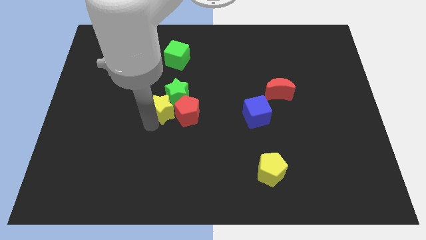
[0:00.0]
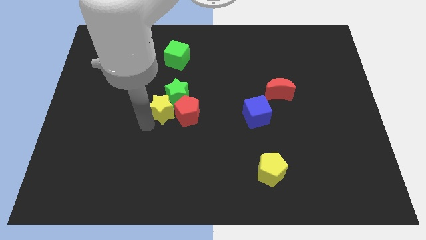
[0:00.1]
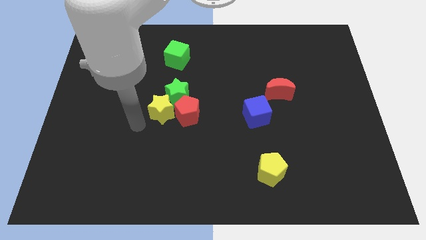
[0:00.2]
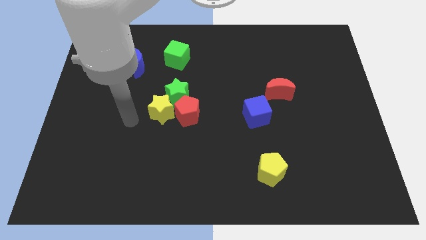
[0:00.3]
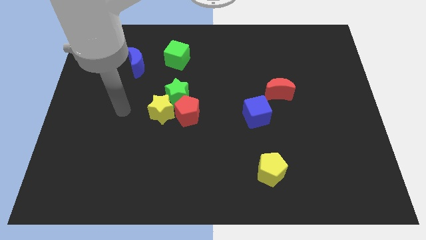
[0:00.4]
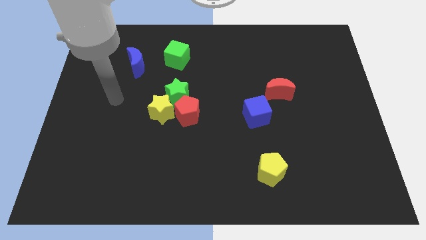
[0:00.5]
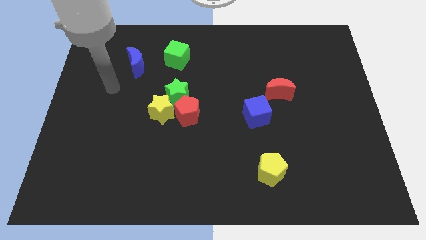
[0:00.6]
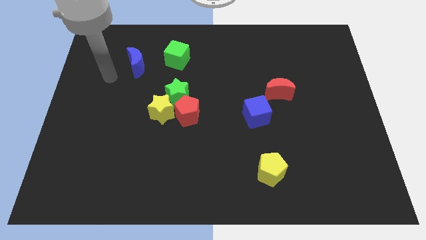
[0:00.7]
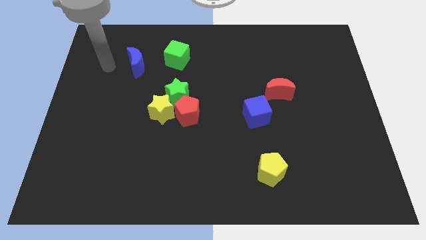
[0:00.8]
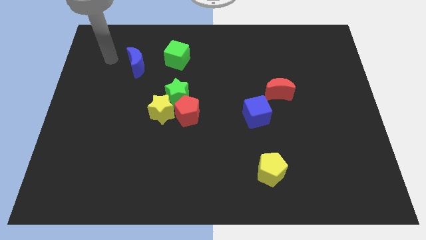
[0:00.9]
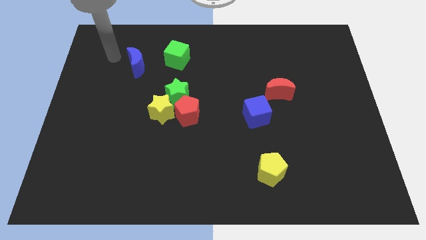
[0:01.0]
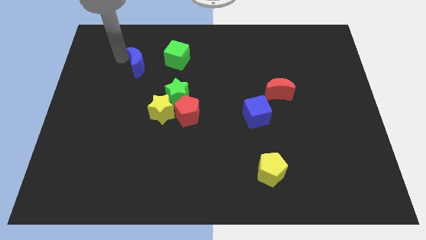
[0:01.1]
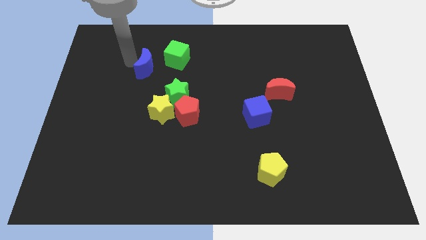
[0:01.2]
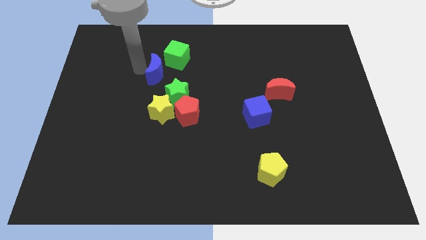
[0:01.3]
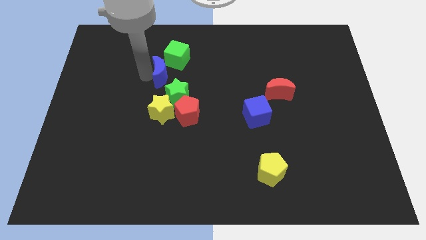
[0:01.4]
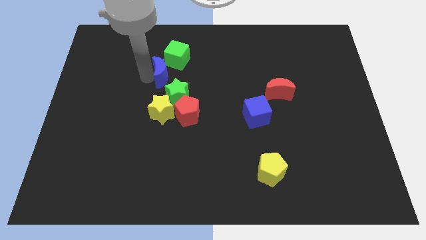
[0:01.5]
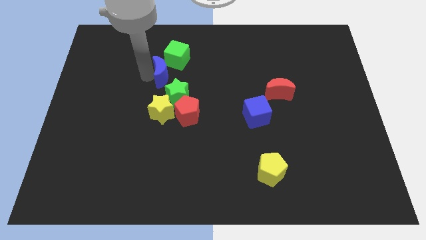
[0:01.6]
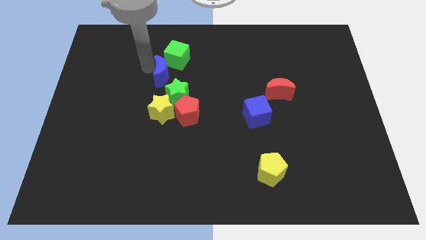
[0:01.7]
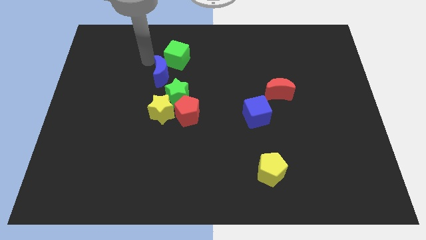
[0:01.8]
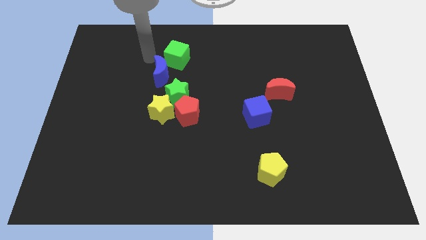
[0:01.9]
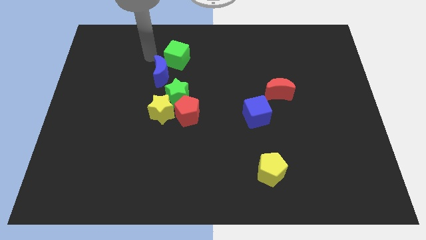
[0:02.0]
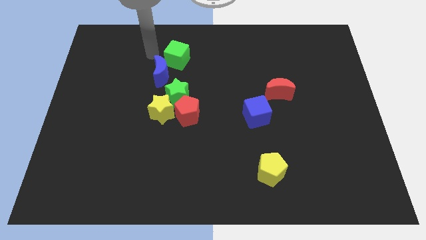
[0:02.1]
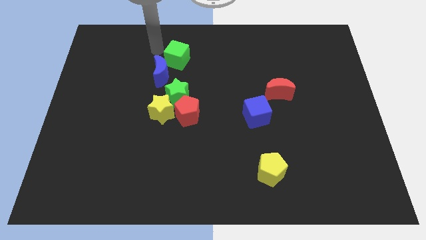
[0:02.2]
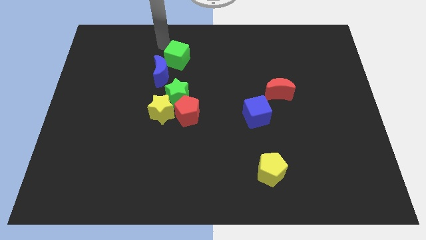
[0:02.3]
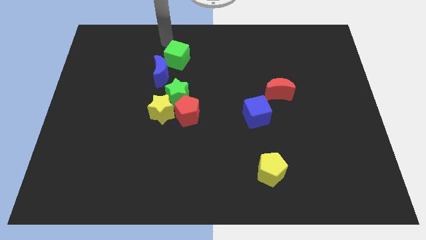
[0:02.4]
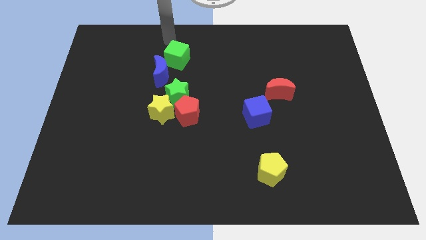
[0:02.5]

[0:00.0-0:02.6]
move the blue moon diagonal top left green star

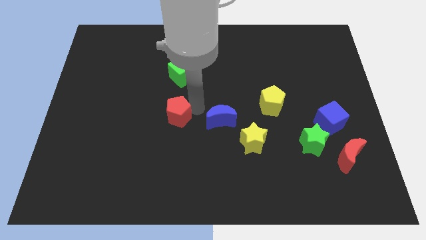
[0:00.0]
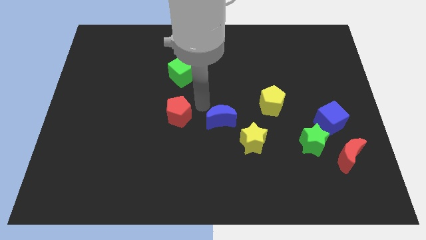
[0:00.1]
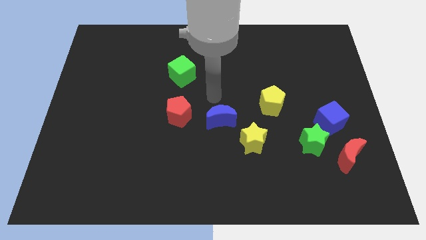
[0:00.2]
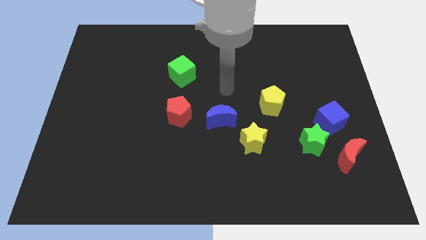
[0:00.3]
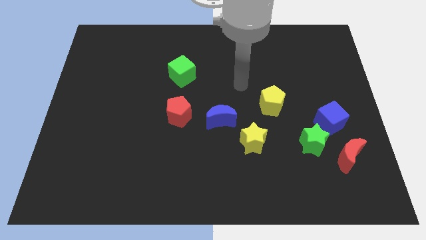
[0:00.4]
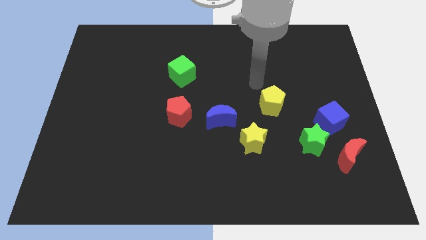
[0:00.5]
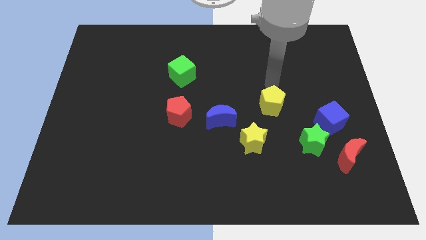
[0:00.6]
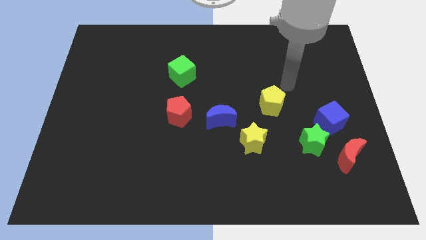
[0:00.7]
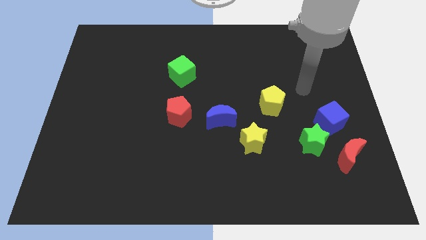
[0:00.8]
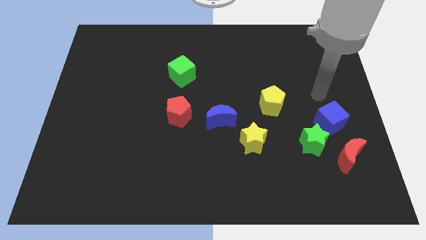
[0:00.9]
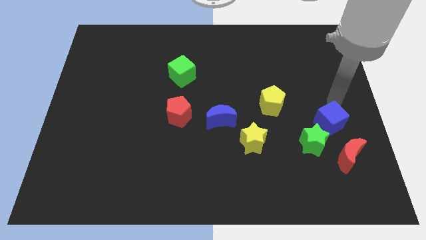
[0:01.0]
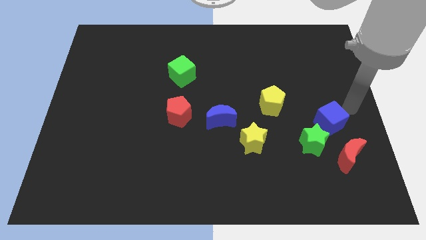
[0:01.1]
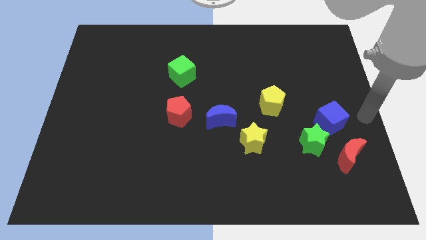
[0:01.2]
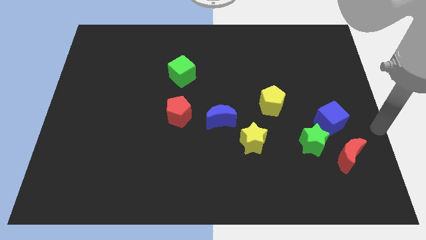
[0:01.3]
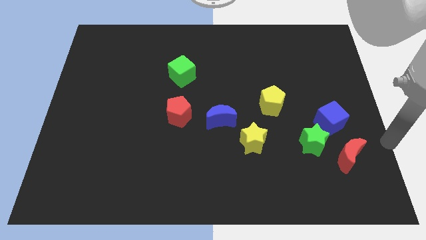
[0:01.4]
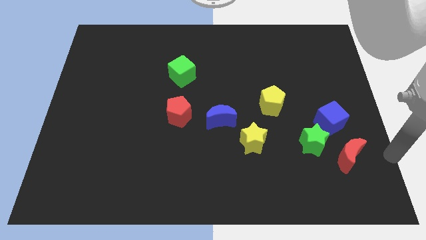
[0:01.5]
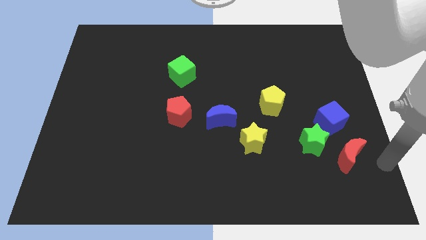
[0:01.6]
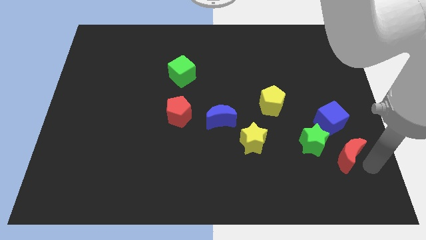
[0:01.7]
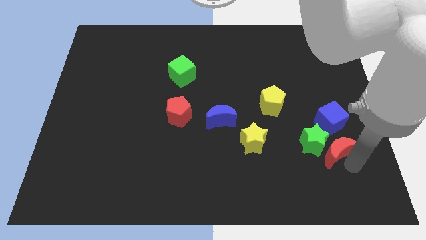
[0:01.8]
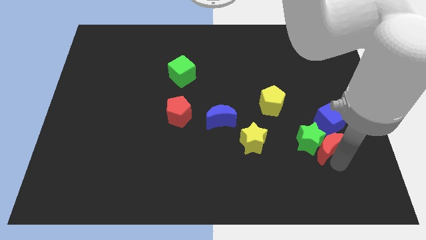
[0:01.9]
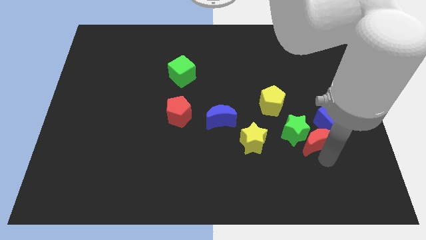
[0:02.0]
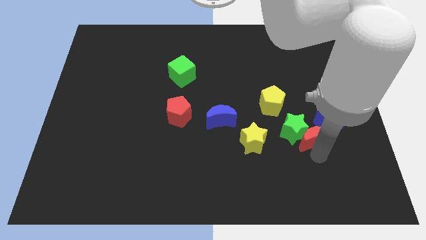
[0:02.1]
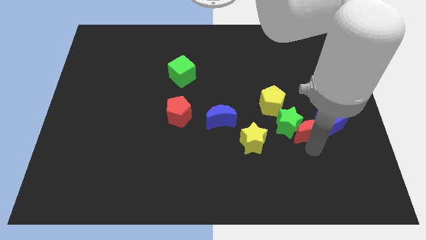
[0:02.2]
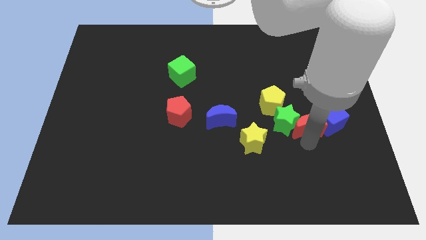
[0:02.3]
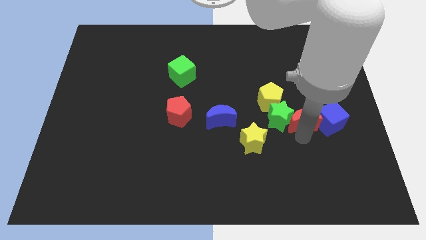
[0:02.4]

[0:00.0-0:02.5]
push the green star with the help of red crescent to the center of the board

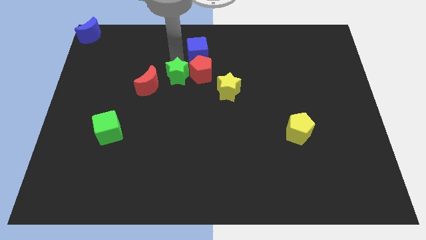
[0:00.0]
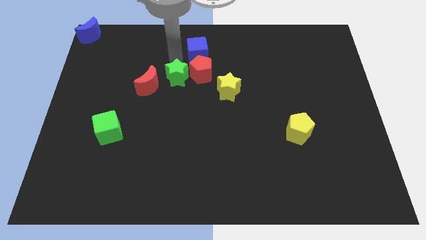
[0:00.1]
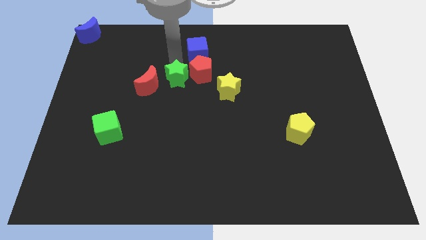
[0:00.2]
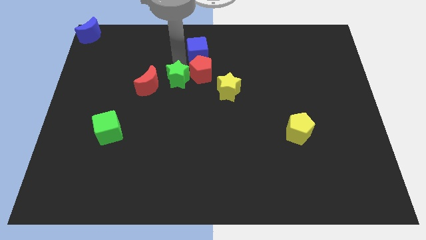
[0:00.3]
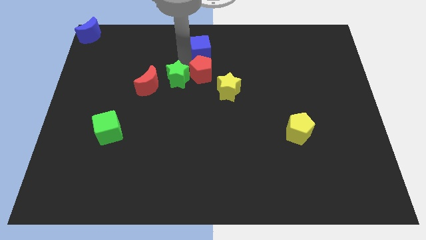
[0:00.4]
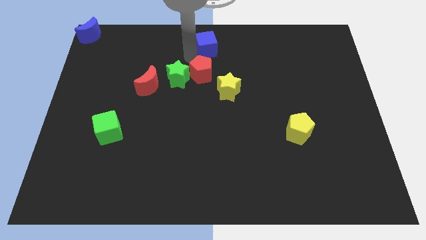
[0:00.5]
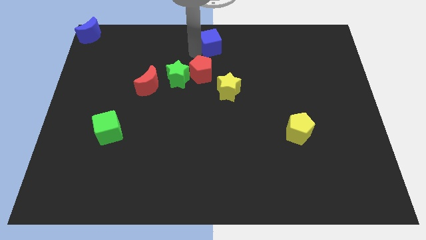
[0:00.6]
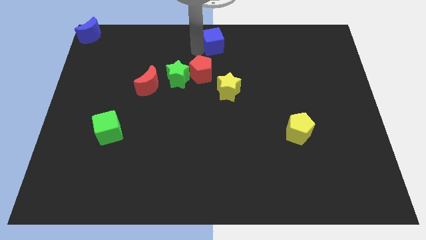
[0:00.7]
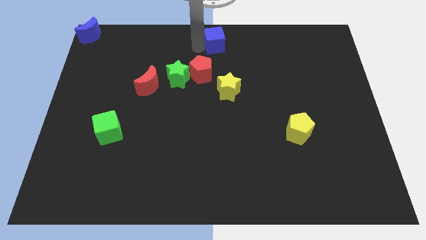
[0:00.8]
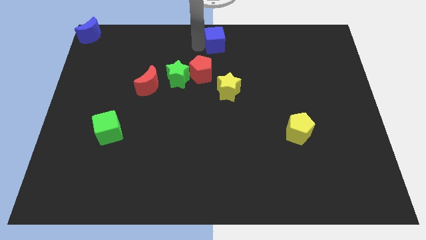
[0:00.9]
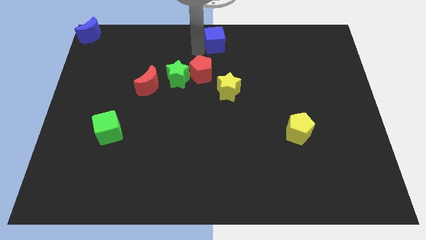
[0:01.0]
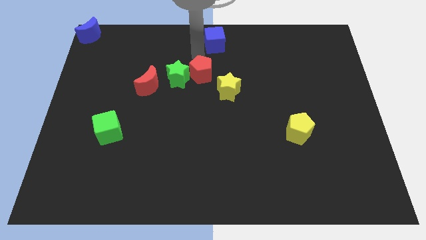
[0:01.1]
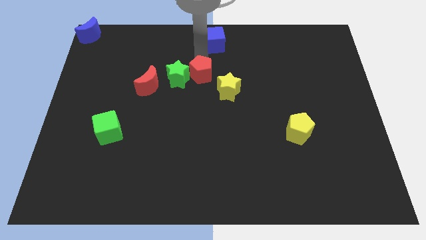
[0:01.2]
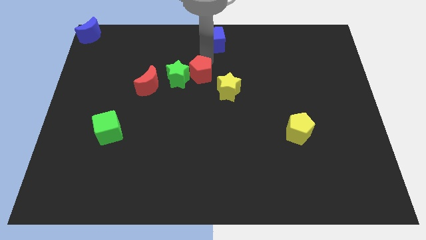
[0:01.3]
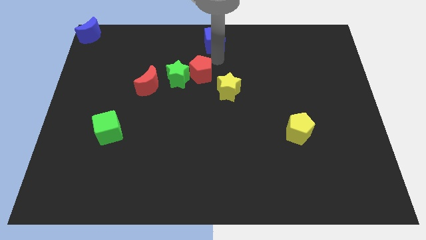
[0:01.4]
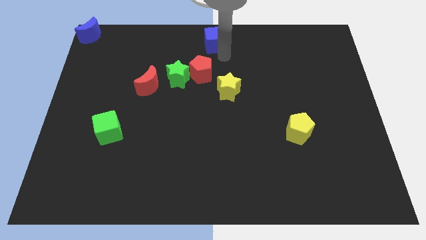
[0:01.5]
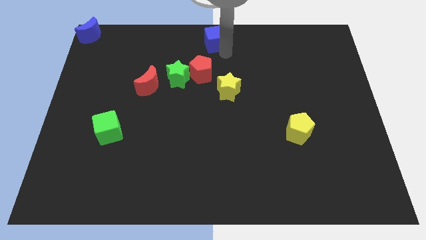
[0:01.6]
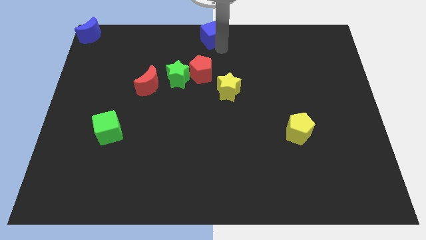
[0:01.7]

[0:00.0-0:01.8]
move the blue cube to the top center

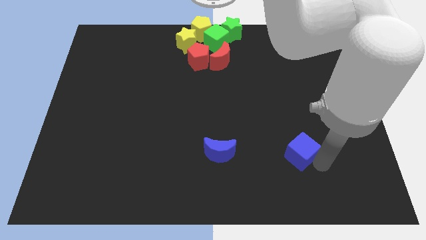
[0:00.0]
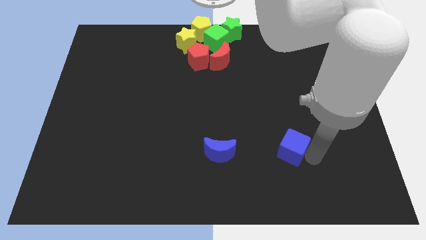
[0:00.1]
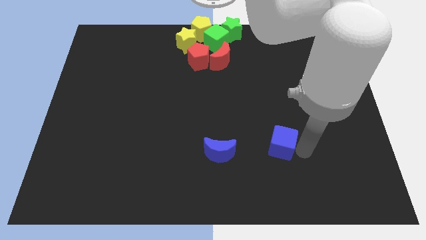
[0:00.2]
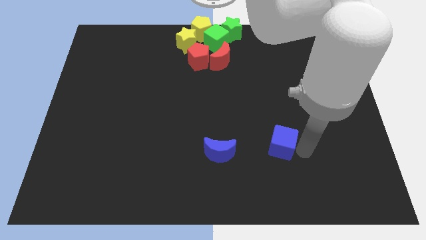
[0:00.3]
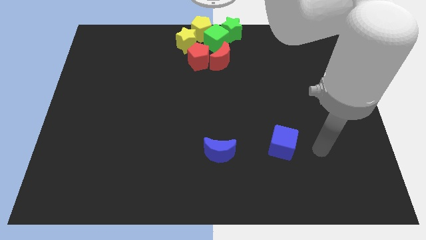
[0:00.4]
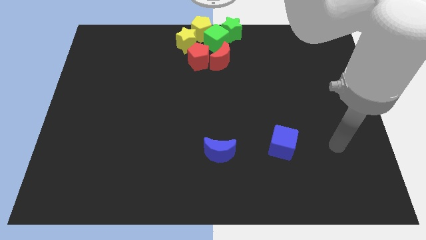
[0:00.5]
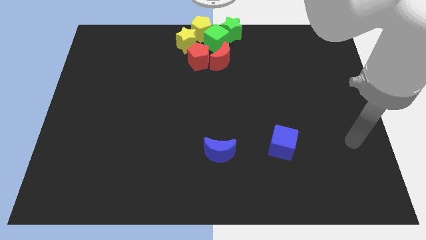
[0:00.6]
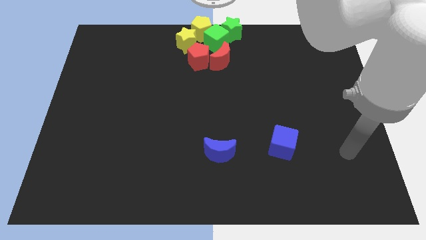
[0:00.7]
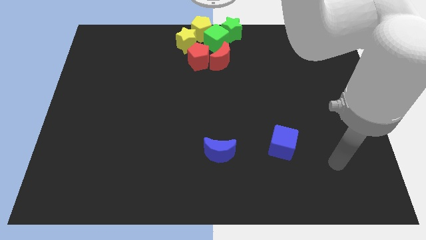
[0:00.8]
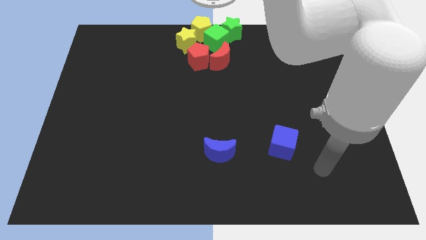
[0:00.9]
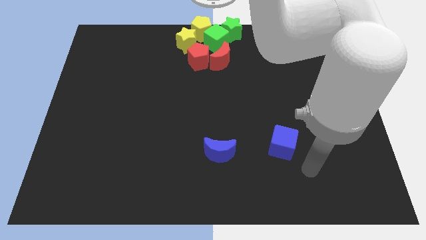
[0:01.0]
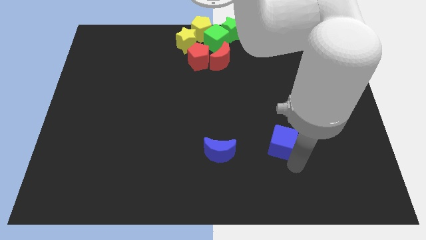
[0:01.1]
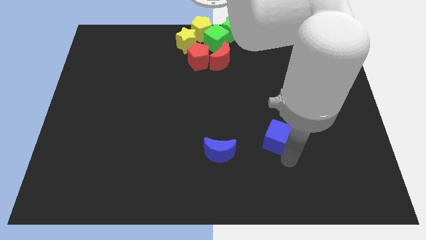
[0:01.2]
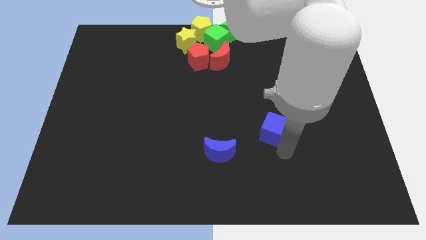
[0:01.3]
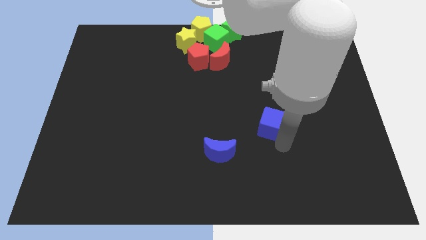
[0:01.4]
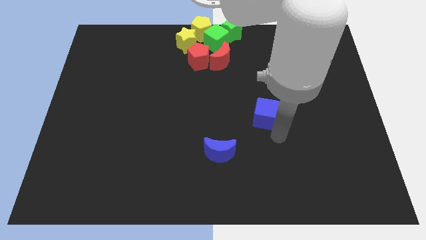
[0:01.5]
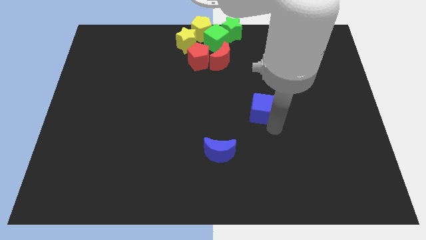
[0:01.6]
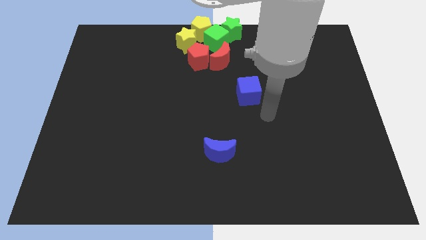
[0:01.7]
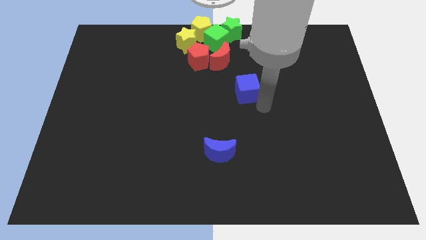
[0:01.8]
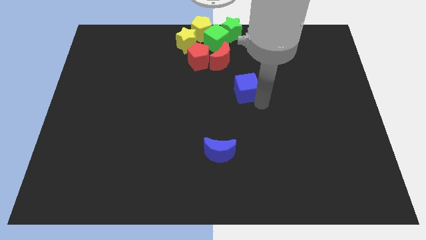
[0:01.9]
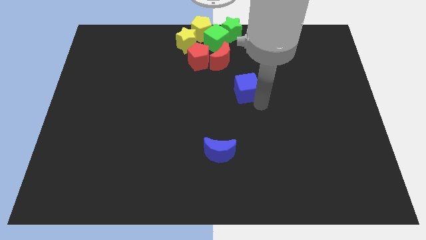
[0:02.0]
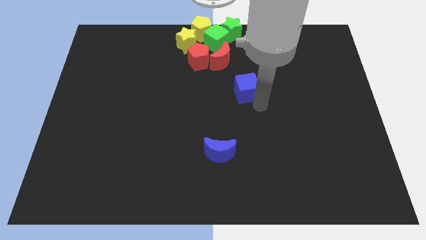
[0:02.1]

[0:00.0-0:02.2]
move the blue cube towards the top side

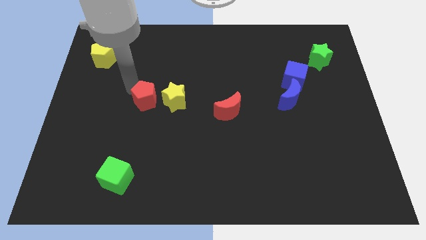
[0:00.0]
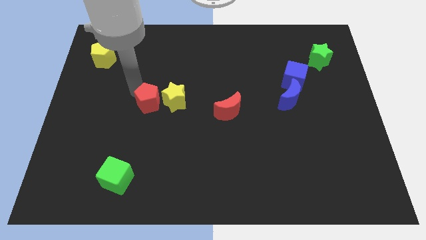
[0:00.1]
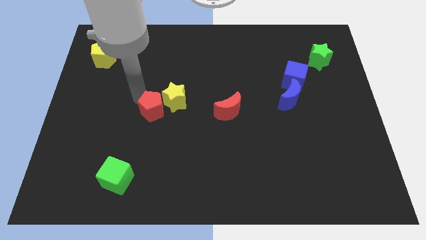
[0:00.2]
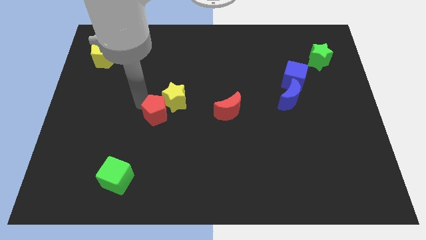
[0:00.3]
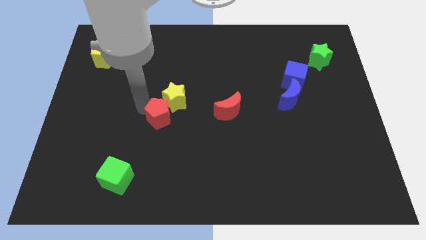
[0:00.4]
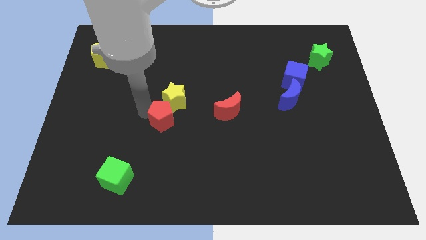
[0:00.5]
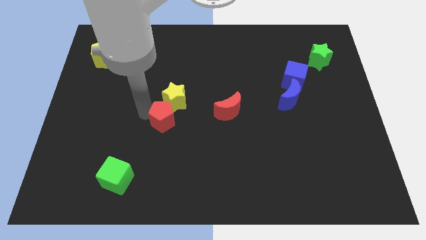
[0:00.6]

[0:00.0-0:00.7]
place the red pentagon diagonally to the left of the yellow star
